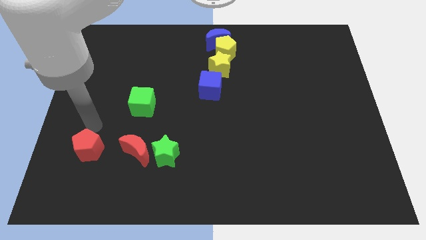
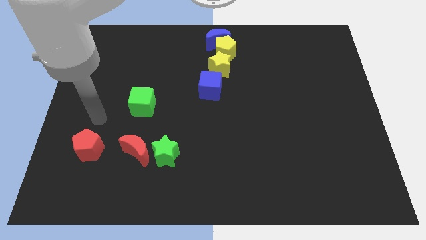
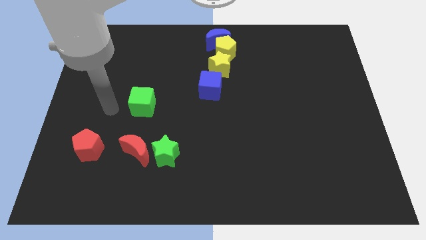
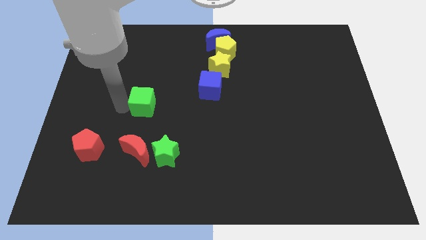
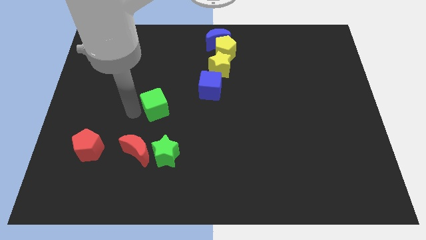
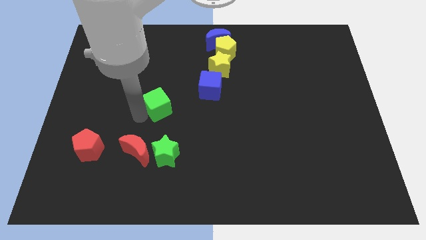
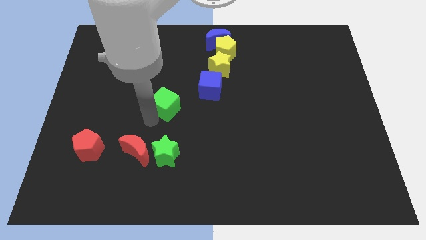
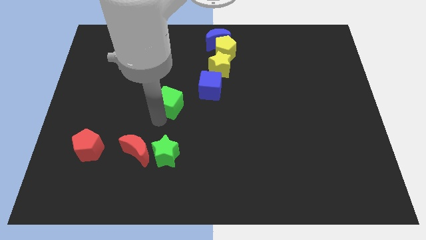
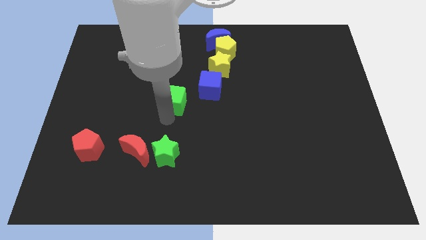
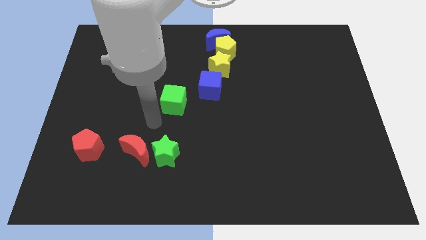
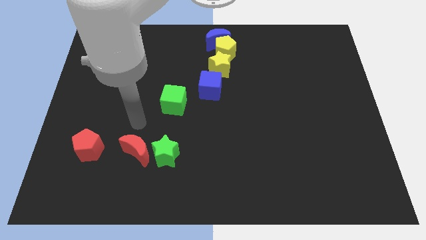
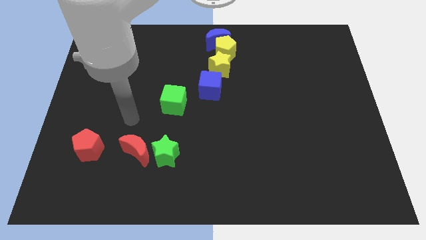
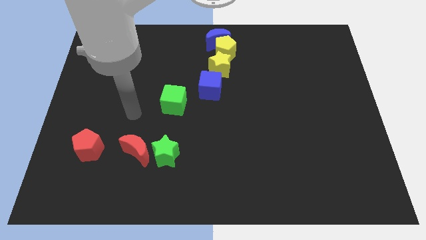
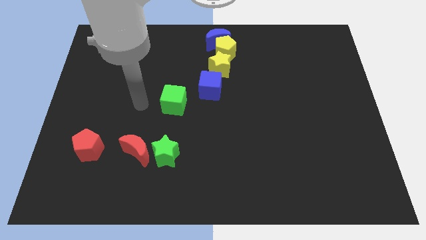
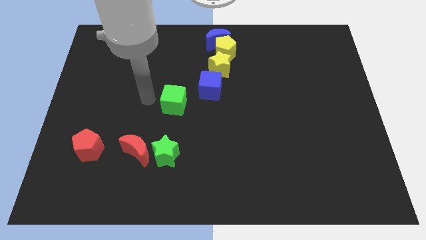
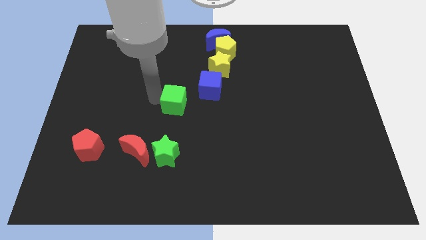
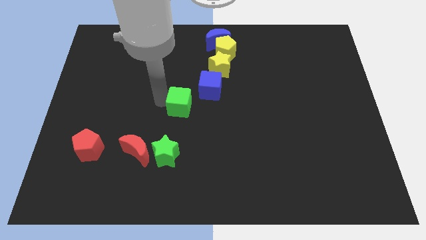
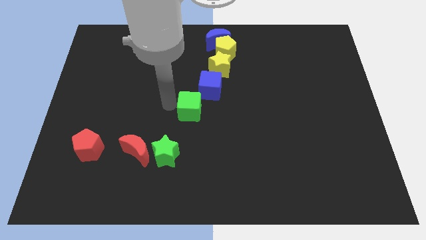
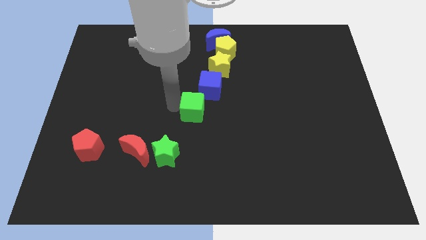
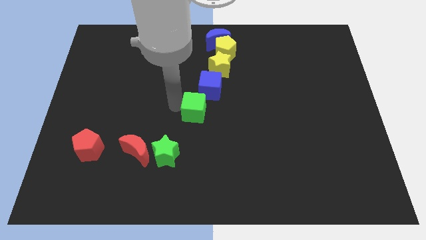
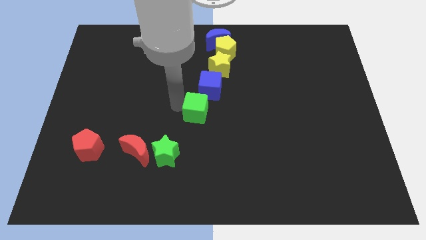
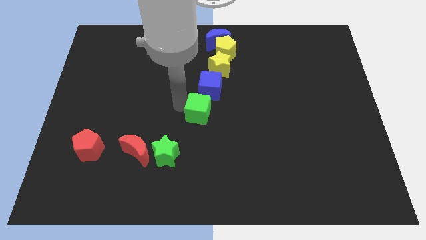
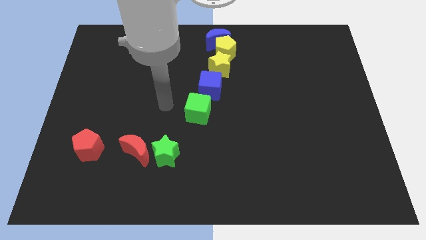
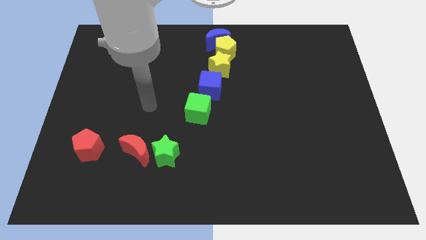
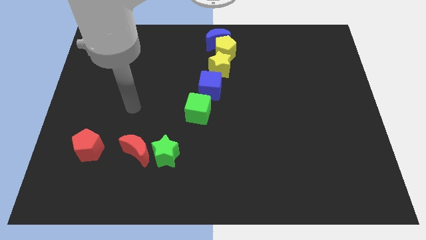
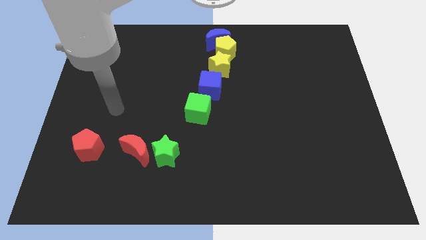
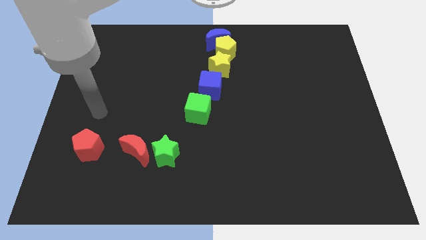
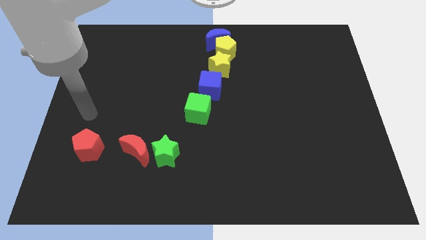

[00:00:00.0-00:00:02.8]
place the green cube to the bottom of the blue cube

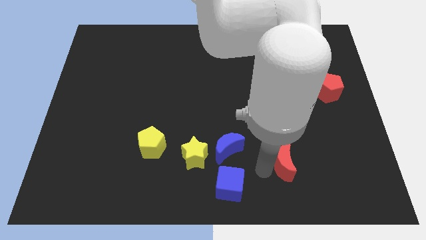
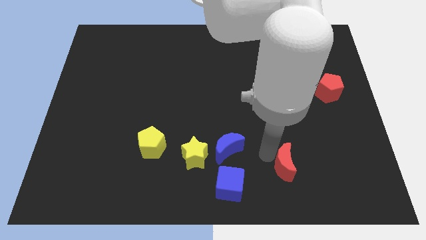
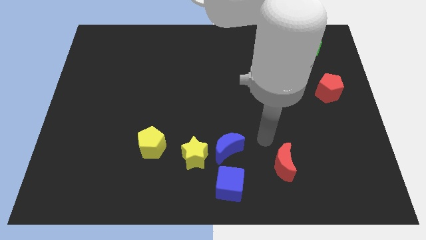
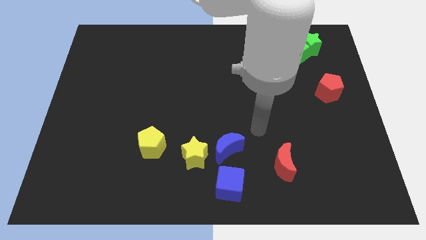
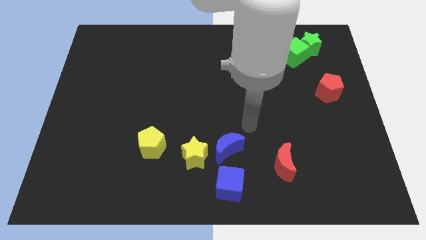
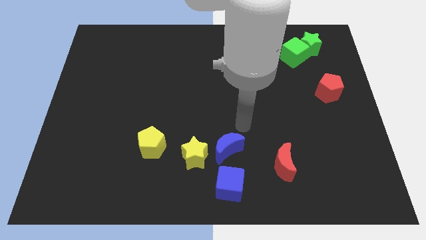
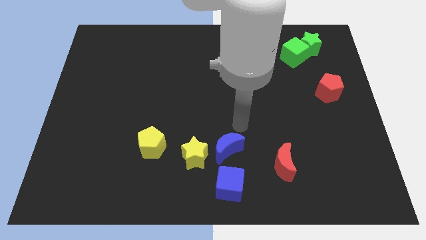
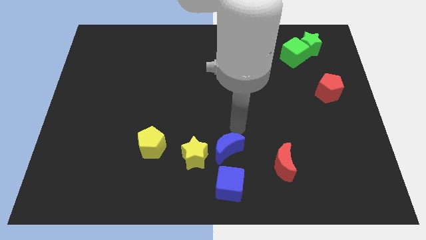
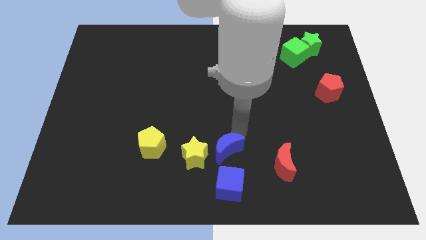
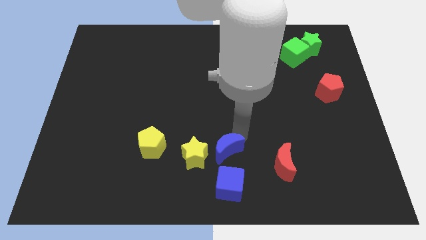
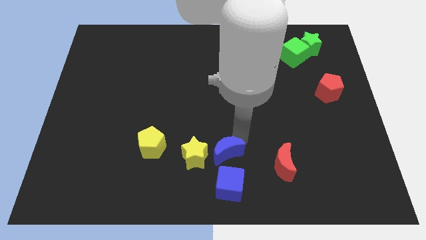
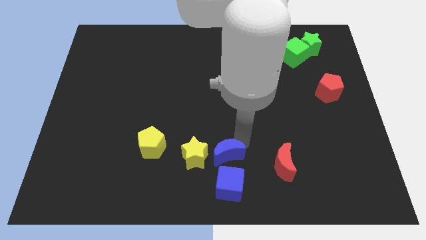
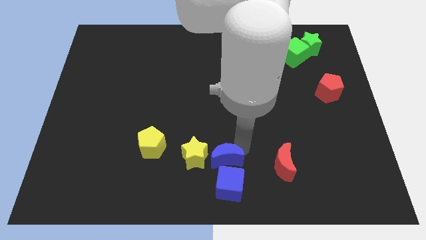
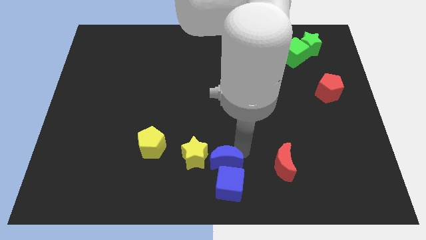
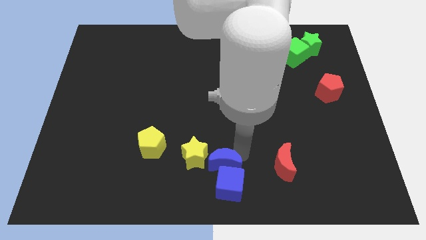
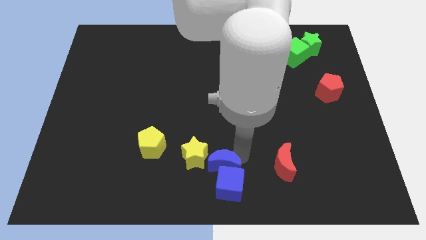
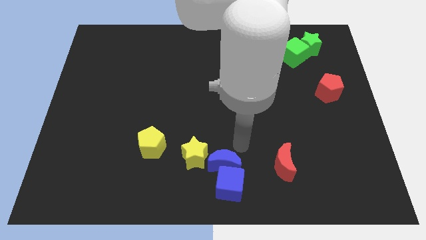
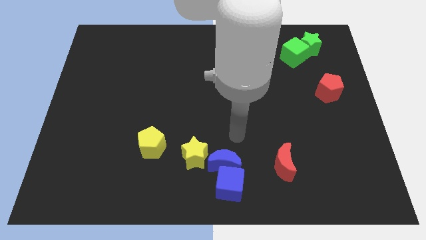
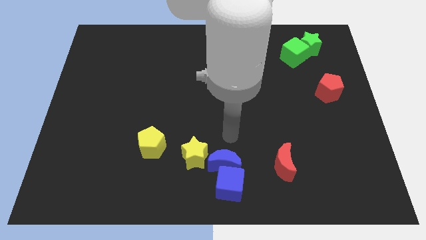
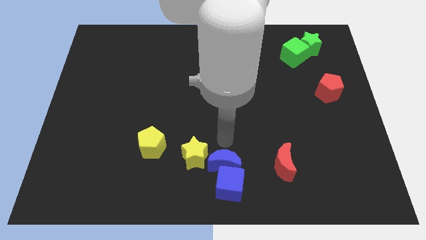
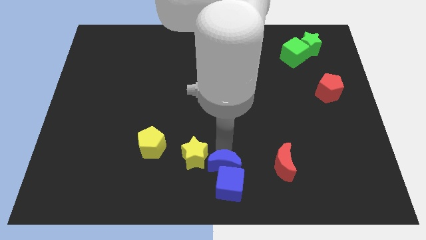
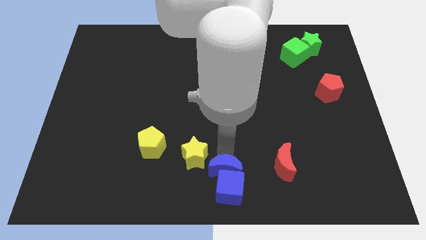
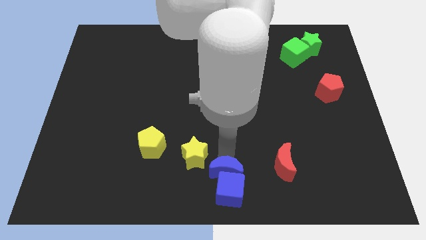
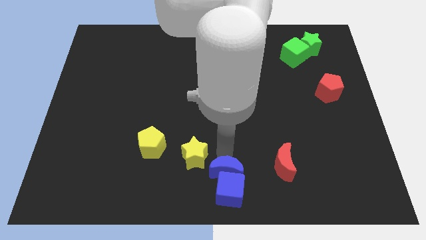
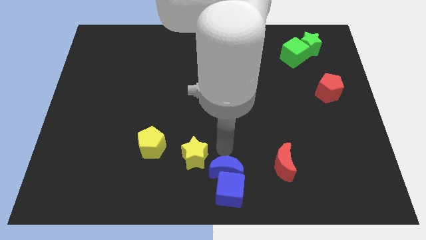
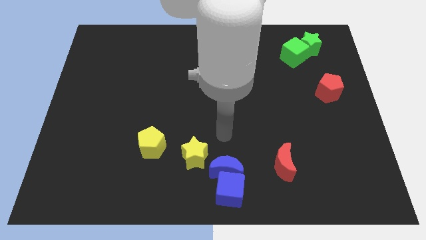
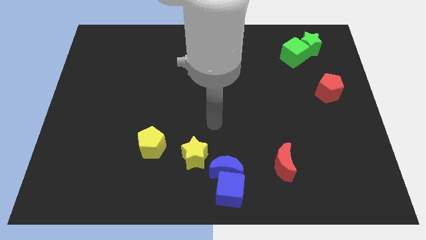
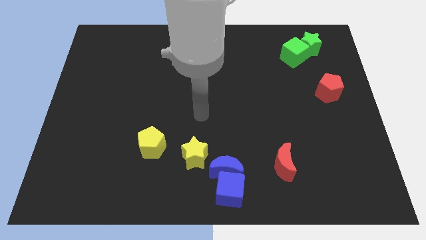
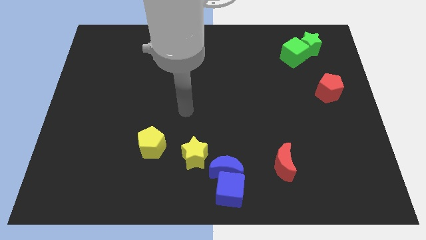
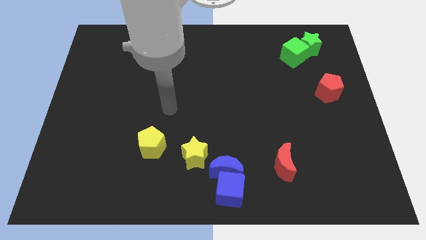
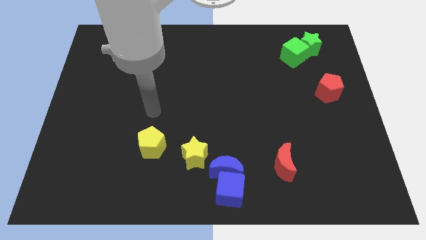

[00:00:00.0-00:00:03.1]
place the blue crescent above the blue cube

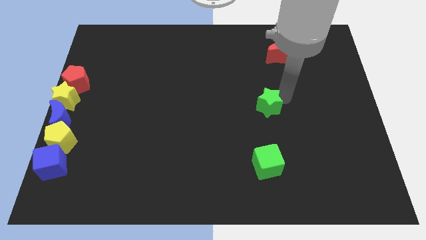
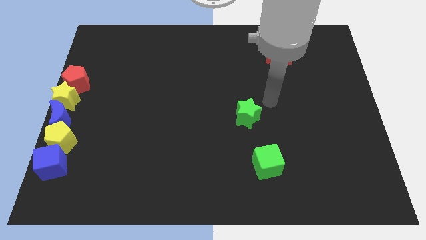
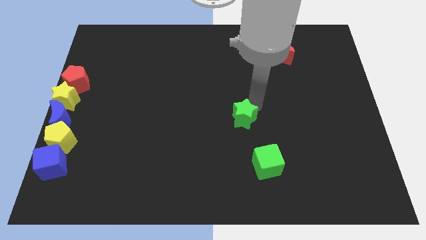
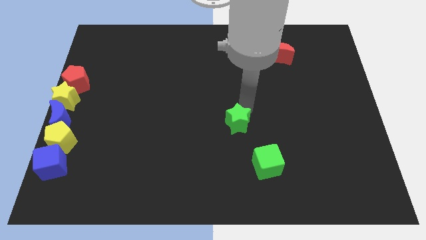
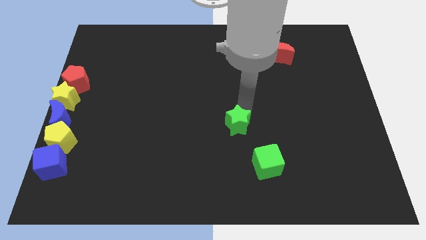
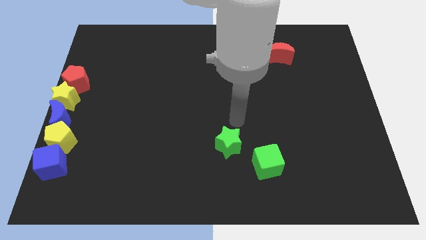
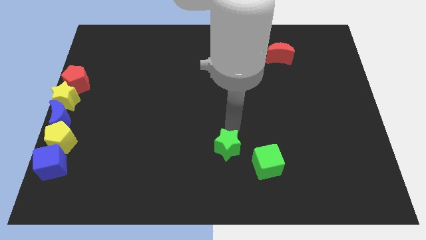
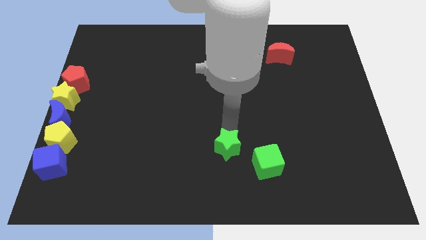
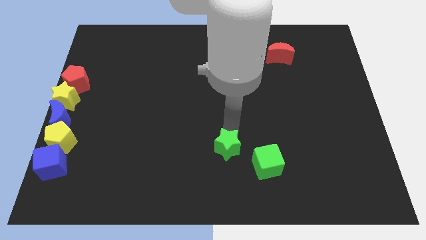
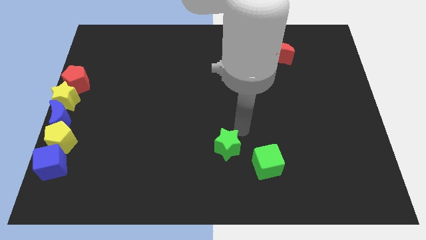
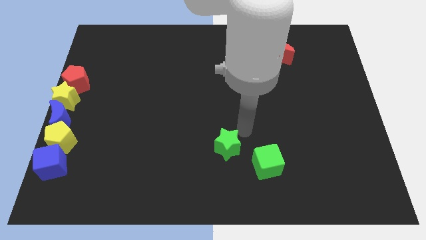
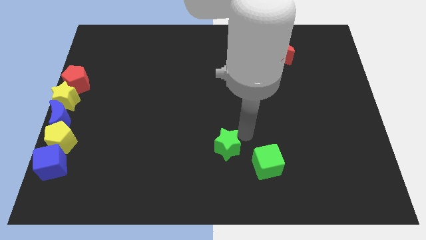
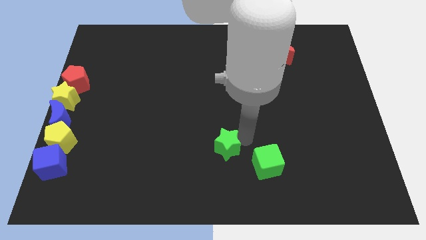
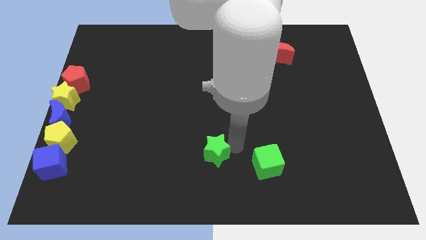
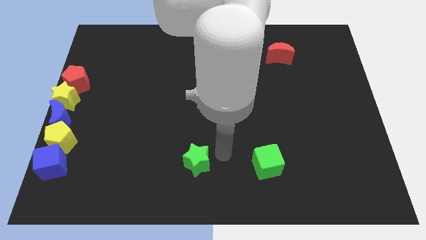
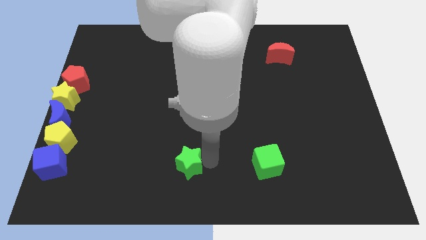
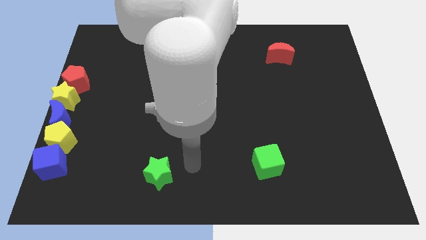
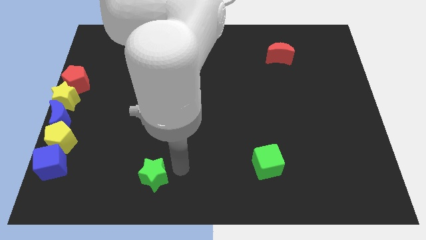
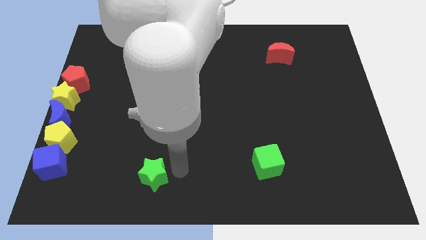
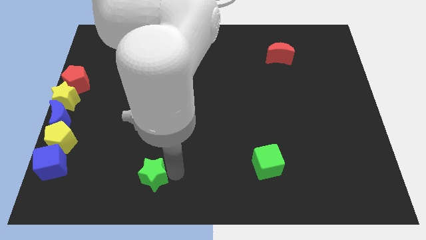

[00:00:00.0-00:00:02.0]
push the green star to the right of the blue cube

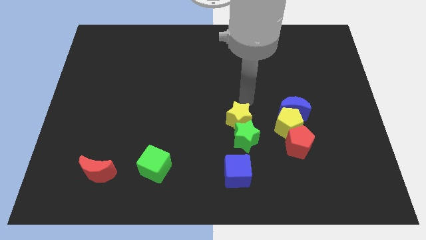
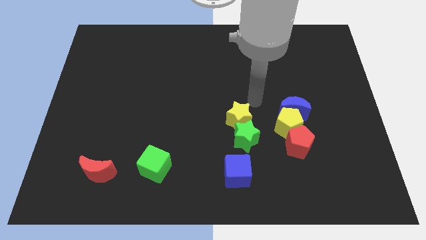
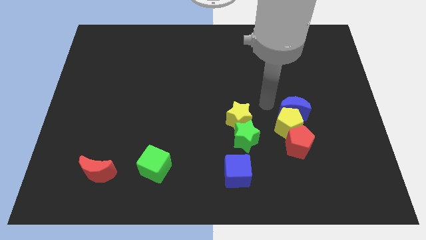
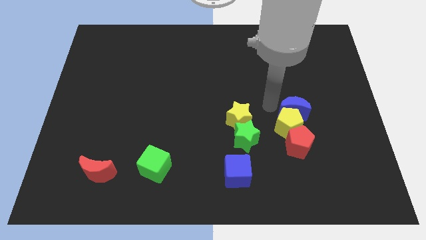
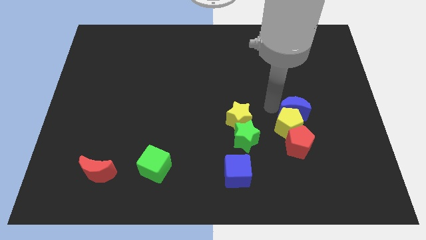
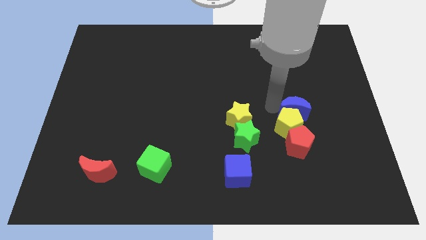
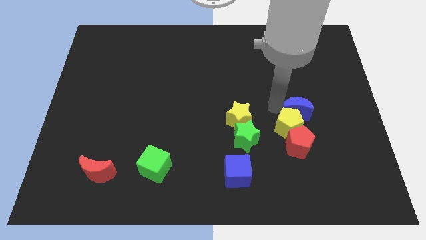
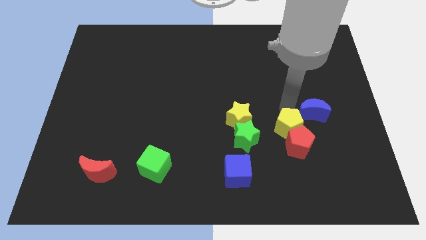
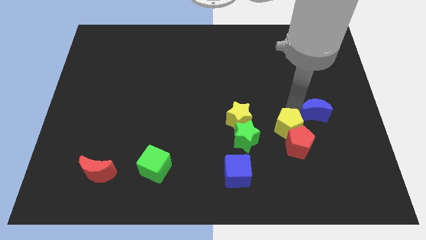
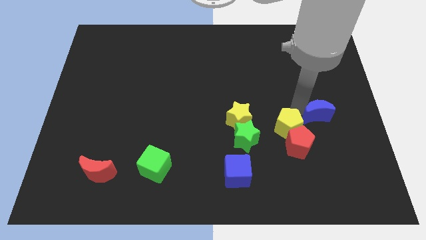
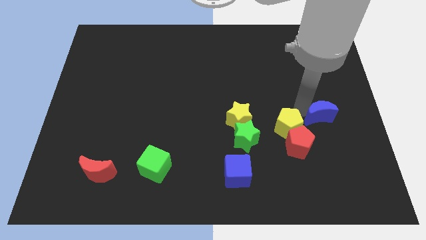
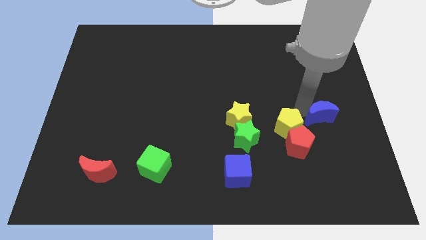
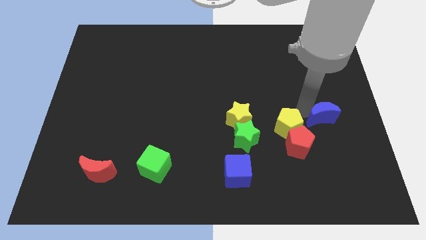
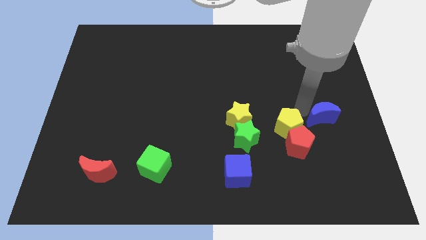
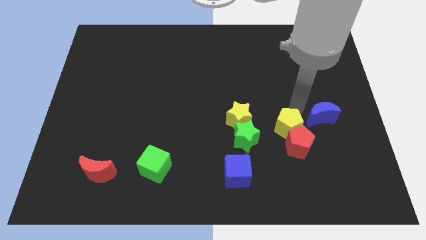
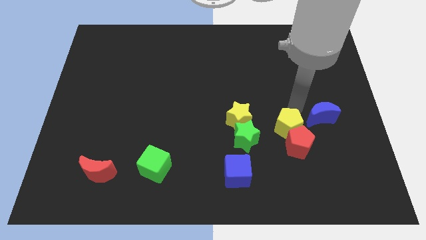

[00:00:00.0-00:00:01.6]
push the blue moon towards the center right
